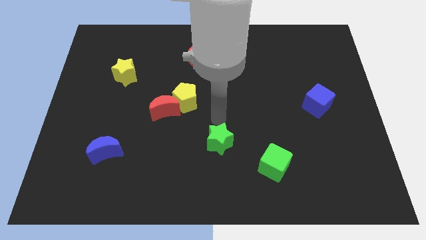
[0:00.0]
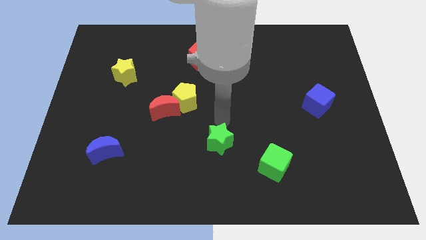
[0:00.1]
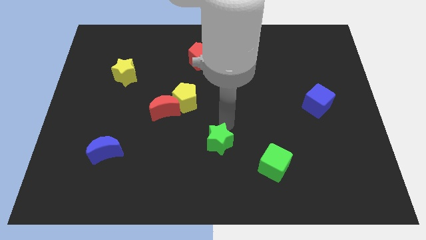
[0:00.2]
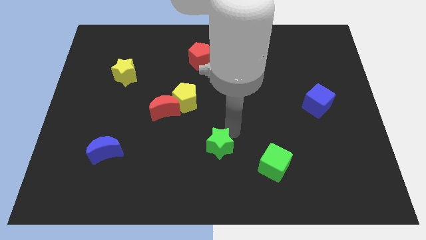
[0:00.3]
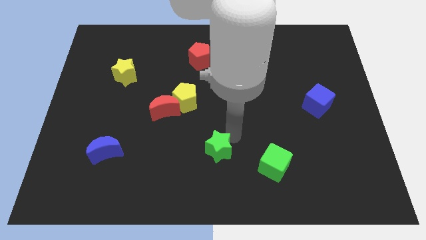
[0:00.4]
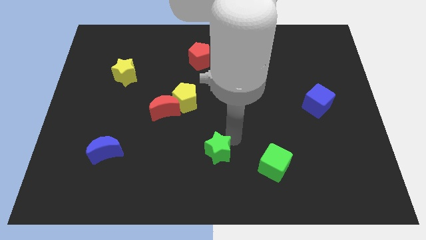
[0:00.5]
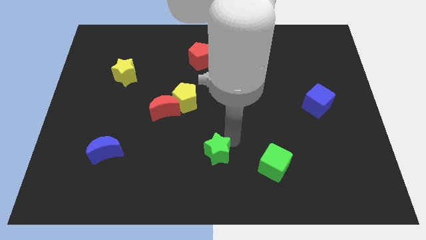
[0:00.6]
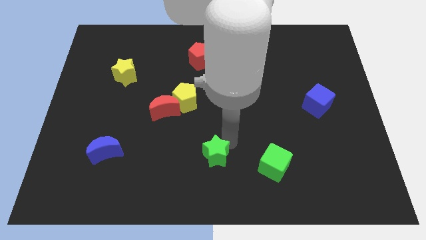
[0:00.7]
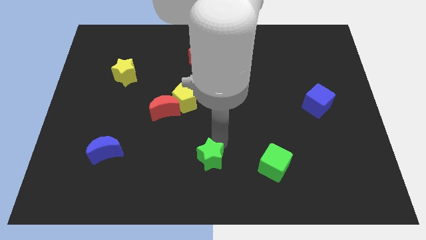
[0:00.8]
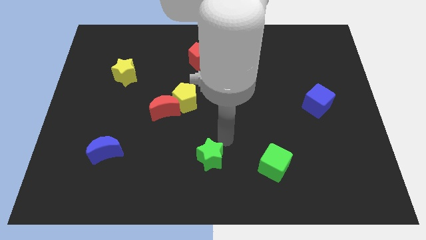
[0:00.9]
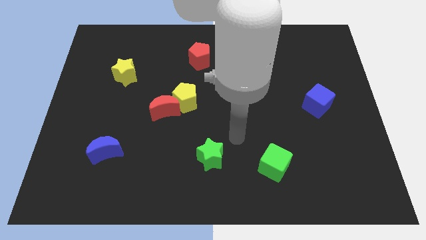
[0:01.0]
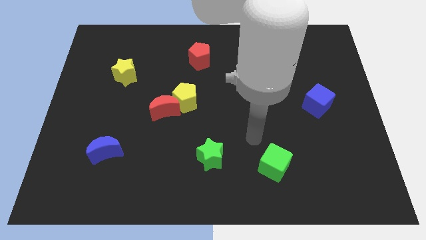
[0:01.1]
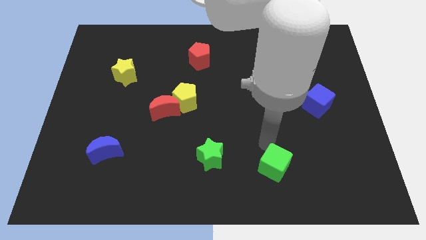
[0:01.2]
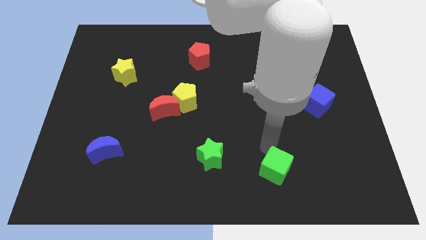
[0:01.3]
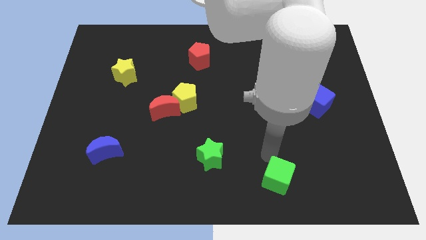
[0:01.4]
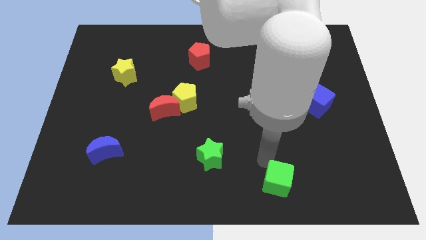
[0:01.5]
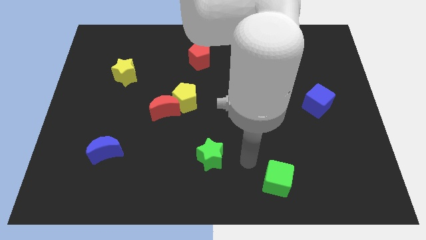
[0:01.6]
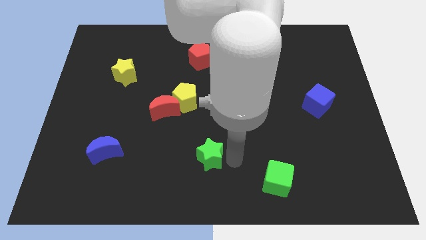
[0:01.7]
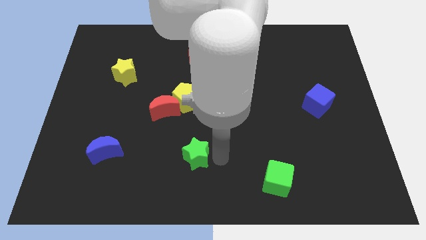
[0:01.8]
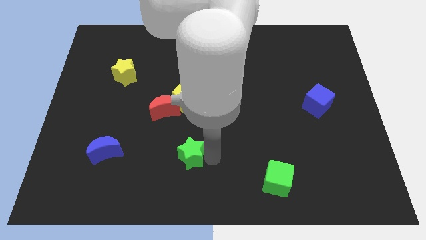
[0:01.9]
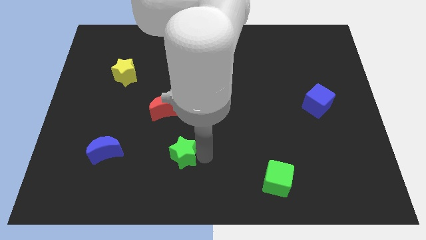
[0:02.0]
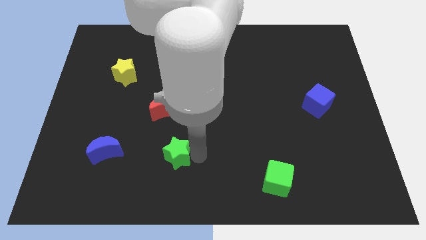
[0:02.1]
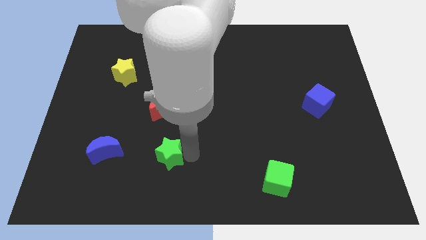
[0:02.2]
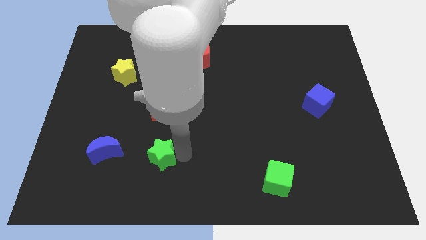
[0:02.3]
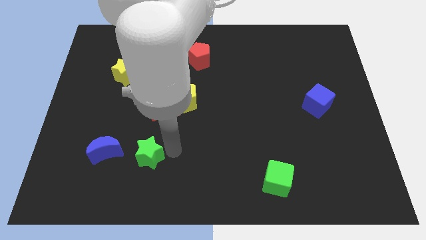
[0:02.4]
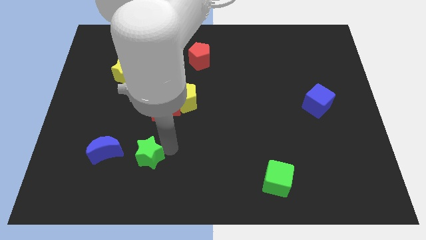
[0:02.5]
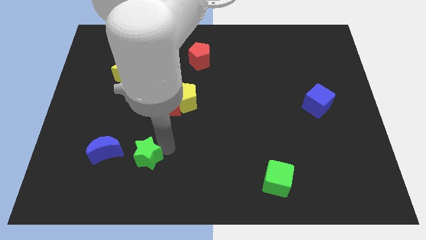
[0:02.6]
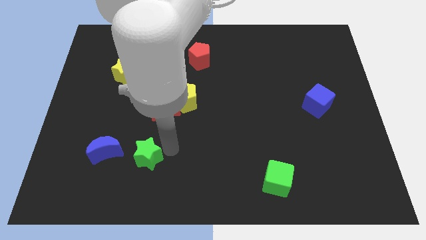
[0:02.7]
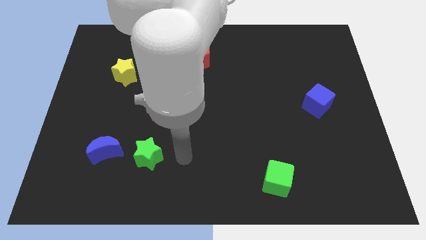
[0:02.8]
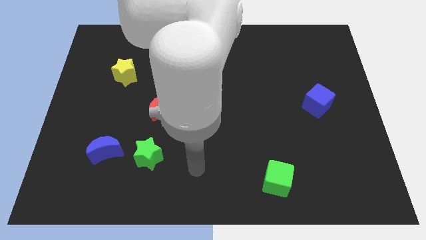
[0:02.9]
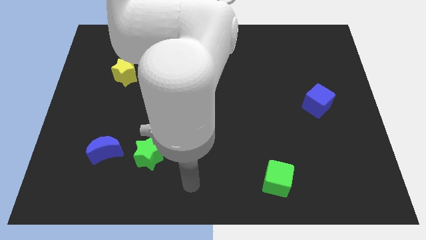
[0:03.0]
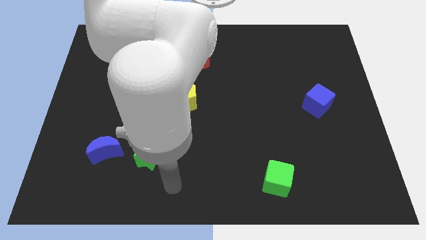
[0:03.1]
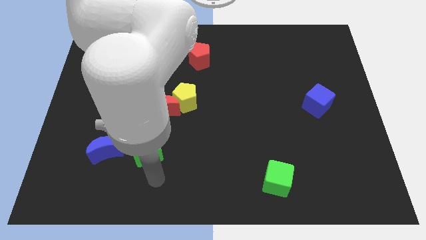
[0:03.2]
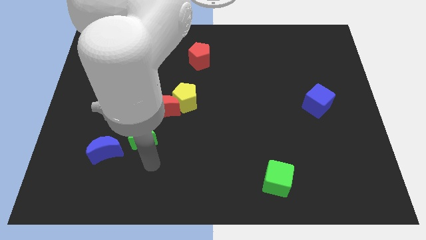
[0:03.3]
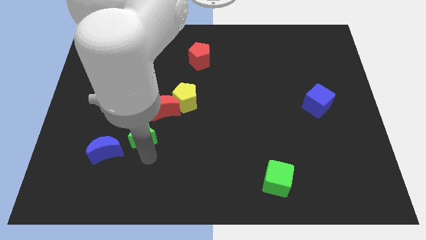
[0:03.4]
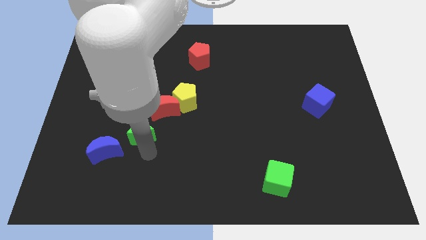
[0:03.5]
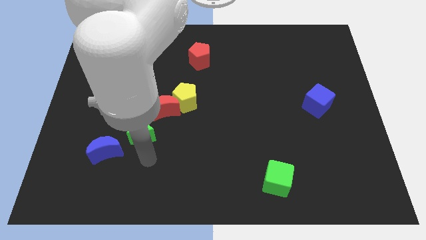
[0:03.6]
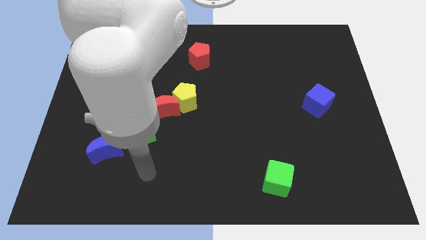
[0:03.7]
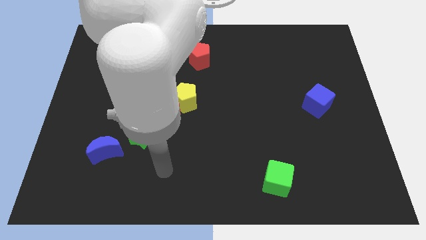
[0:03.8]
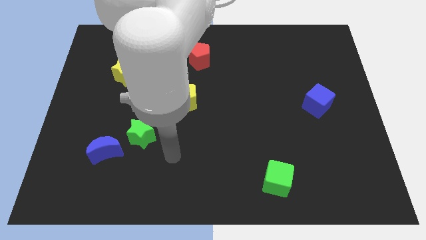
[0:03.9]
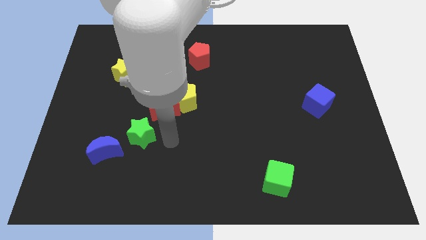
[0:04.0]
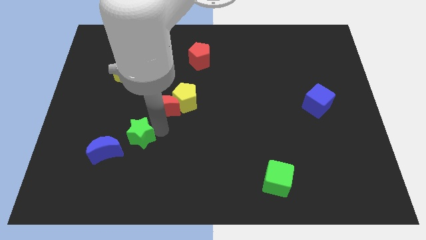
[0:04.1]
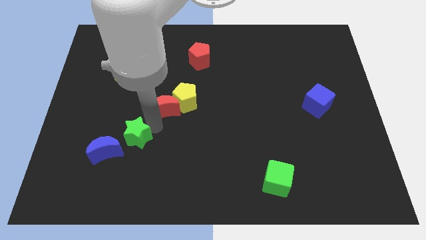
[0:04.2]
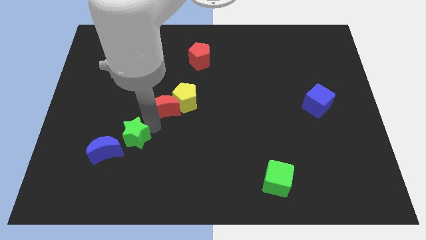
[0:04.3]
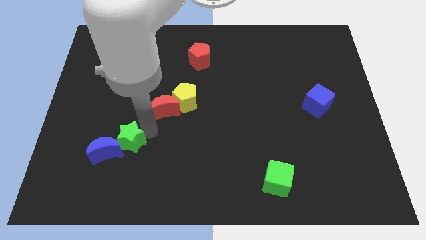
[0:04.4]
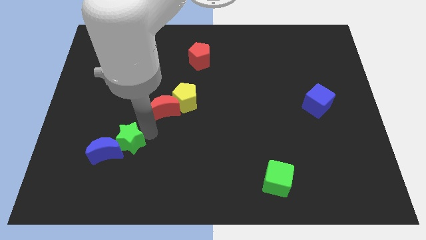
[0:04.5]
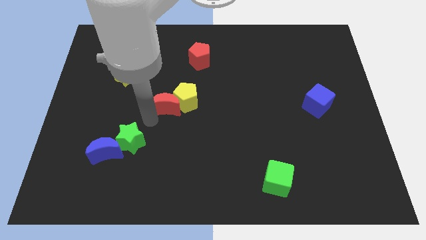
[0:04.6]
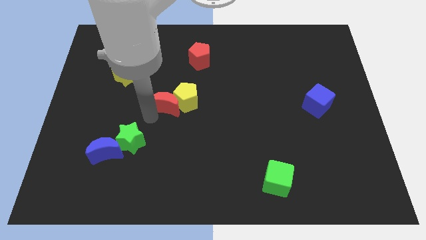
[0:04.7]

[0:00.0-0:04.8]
move the star towards the blue crescent on bottom left of the board

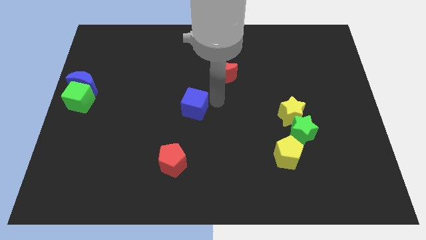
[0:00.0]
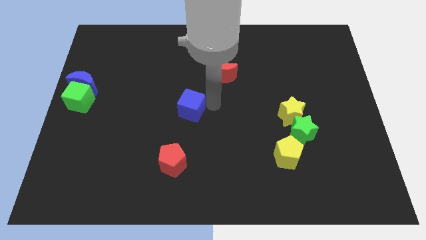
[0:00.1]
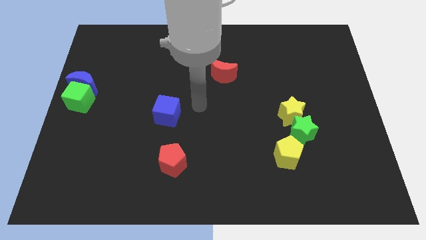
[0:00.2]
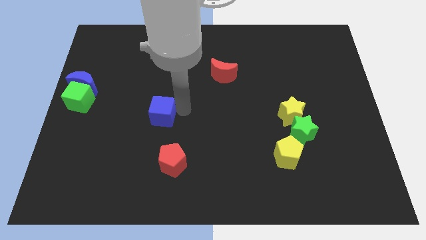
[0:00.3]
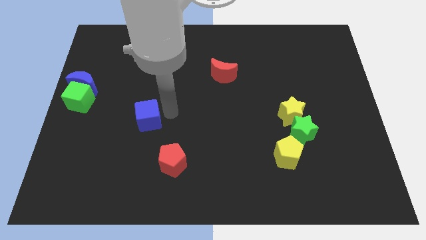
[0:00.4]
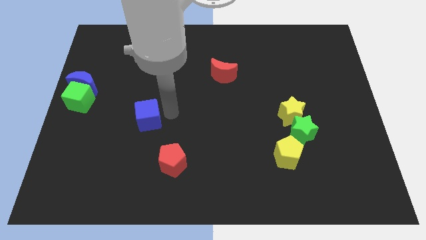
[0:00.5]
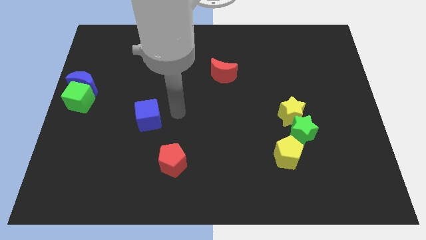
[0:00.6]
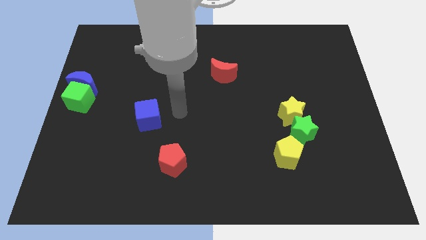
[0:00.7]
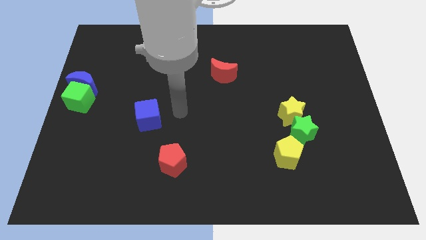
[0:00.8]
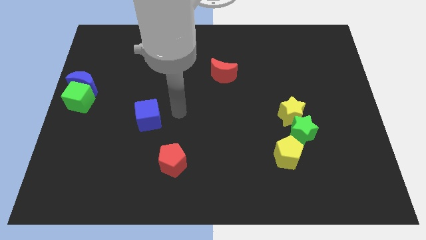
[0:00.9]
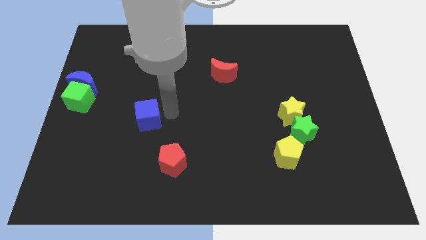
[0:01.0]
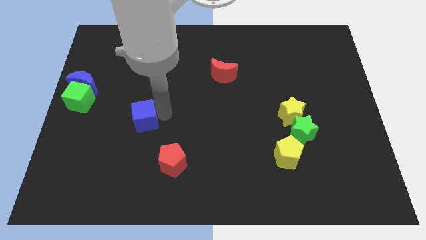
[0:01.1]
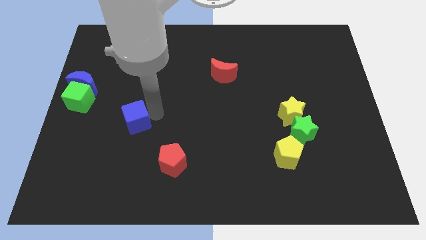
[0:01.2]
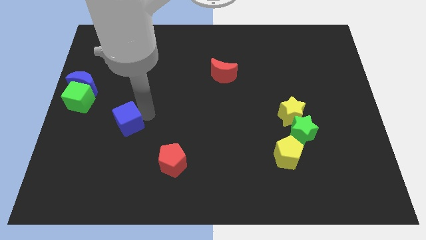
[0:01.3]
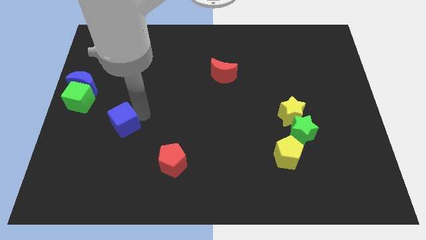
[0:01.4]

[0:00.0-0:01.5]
place the blue cube in between the red pentagon and green cube

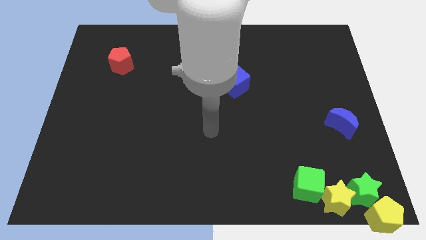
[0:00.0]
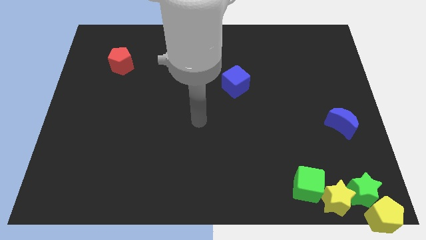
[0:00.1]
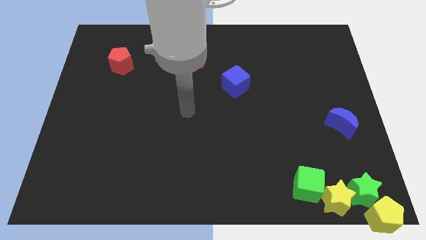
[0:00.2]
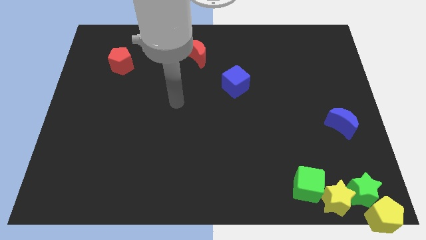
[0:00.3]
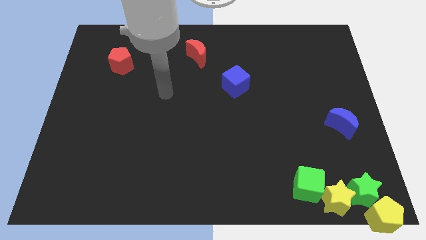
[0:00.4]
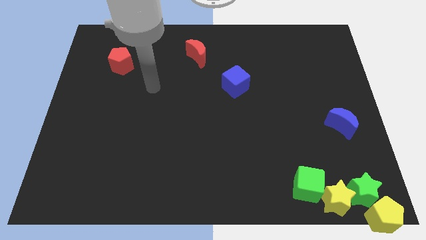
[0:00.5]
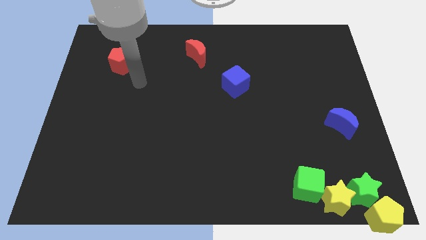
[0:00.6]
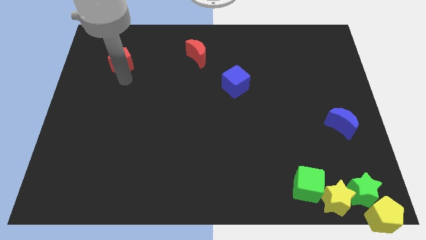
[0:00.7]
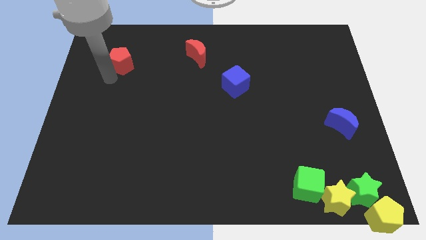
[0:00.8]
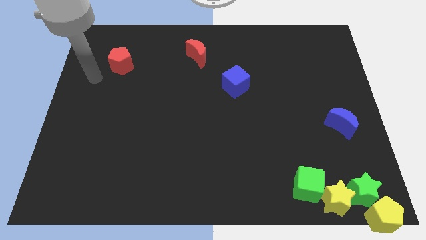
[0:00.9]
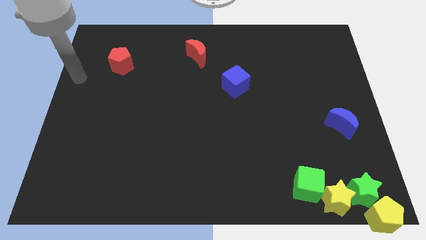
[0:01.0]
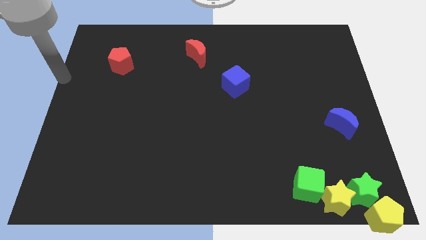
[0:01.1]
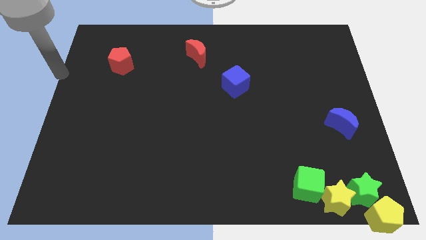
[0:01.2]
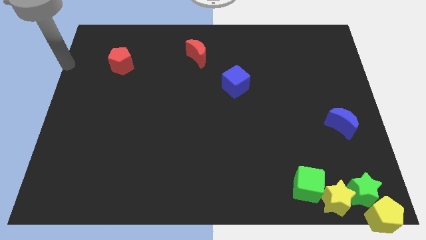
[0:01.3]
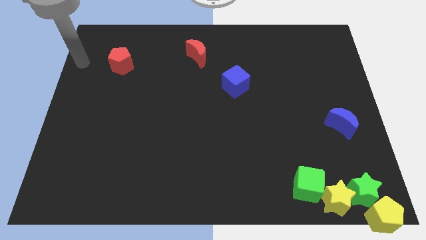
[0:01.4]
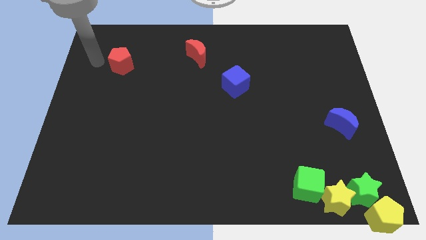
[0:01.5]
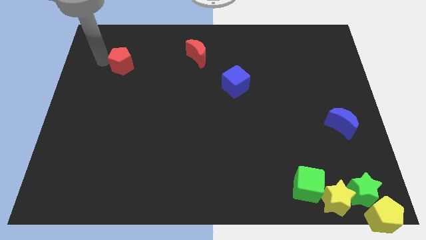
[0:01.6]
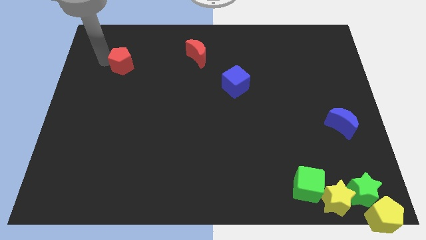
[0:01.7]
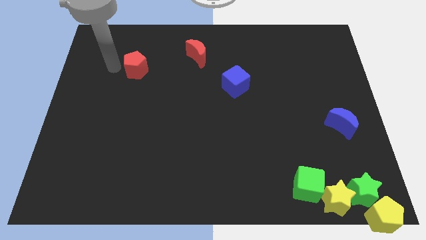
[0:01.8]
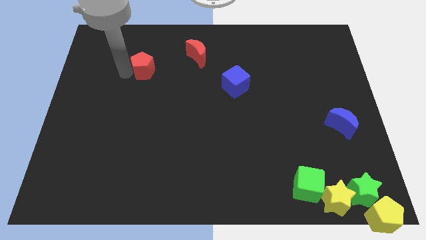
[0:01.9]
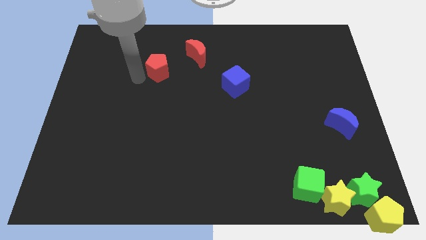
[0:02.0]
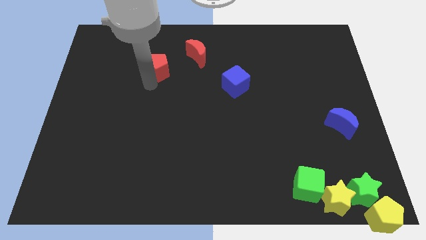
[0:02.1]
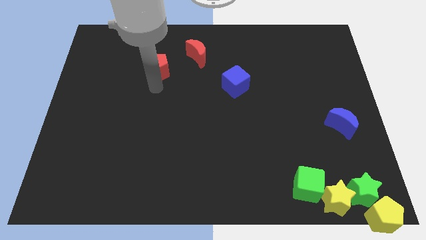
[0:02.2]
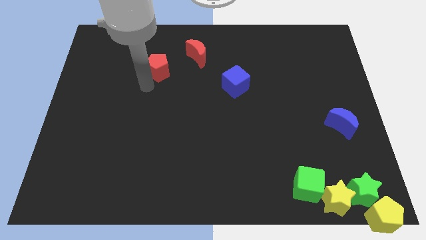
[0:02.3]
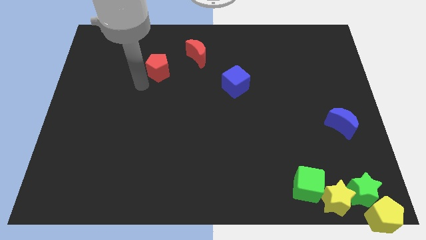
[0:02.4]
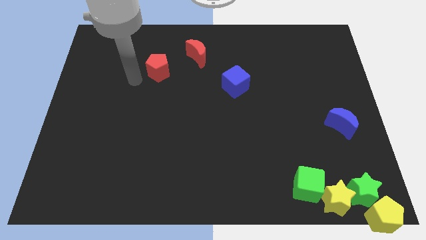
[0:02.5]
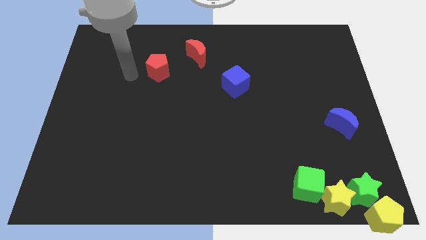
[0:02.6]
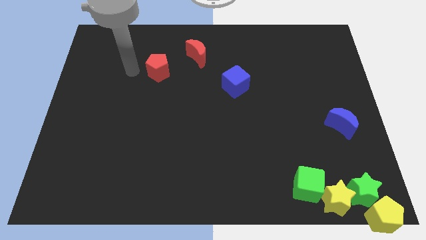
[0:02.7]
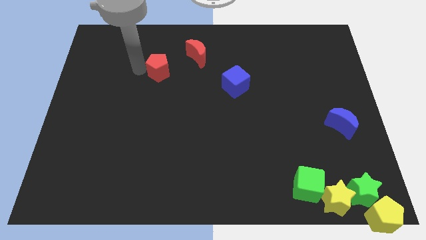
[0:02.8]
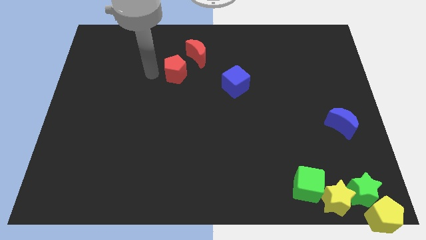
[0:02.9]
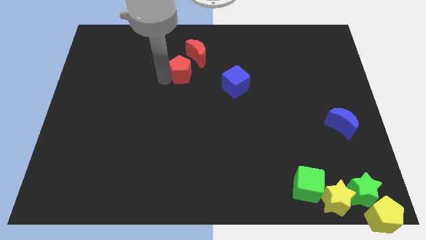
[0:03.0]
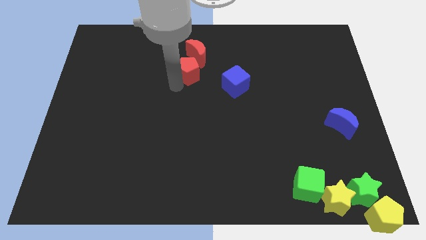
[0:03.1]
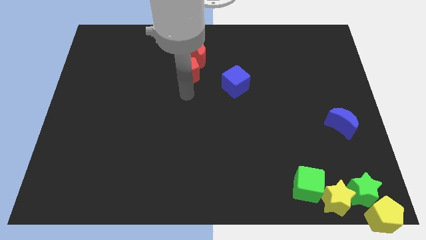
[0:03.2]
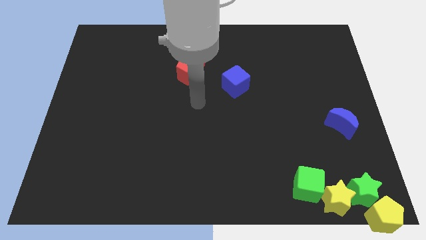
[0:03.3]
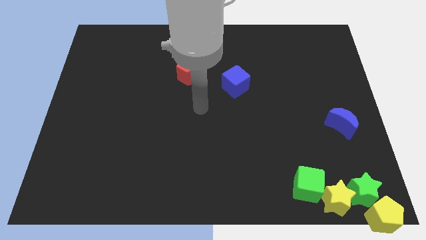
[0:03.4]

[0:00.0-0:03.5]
place red pentagon to the bottom of red moon
